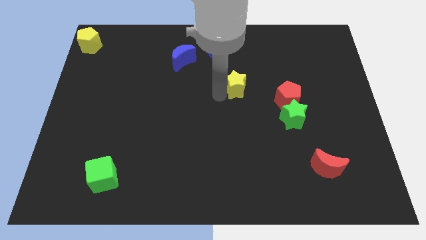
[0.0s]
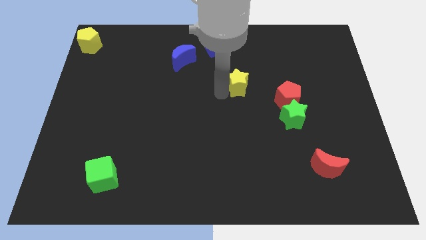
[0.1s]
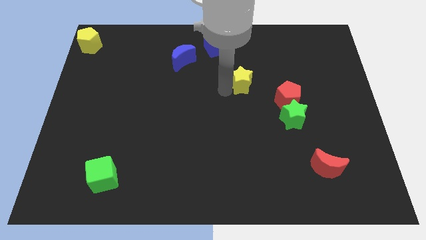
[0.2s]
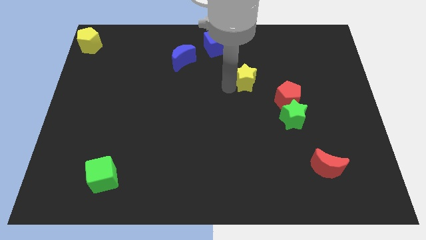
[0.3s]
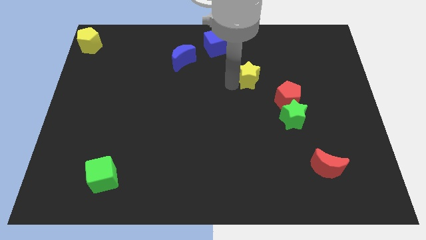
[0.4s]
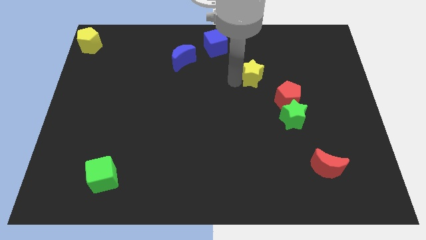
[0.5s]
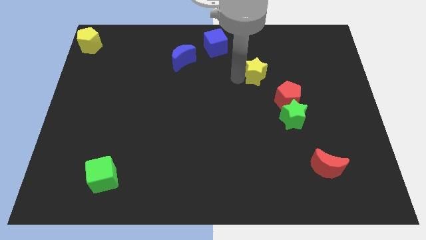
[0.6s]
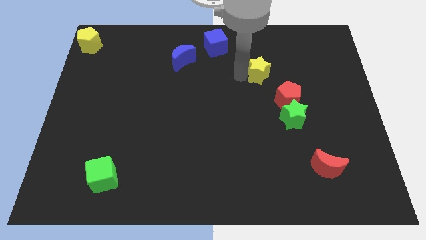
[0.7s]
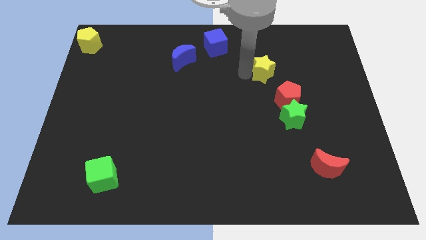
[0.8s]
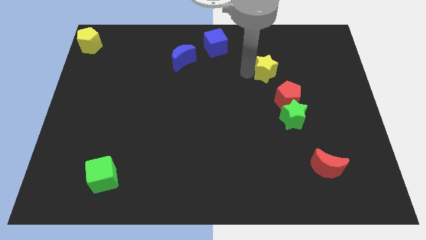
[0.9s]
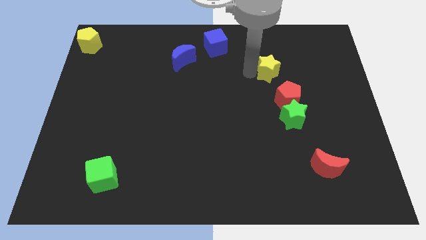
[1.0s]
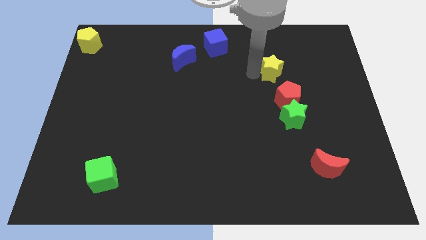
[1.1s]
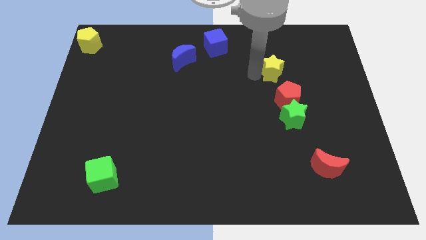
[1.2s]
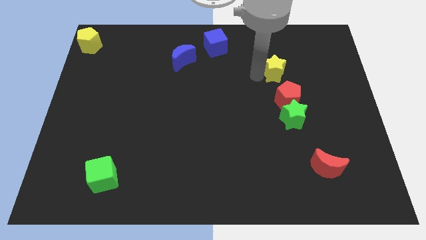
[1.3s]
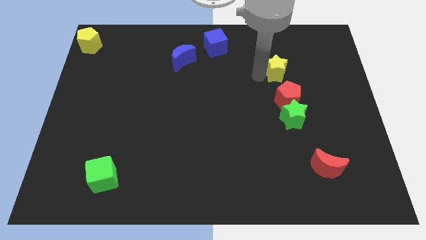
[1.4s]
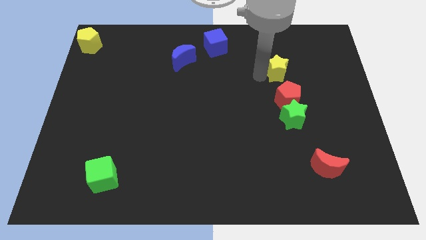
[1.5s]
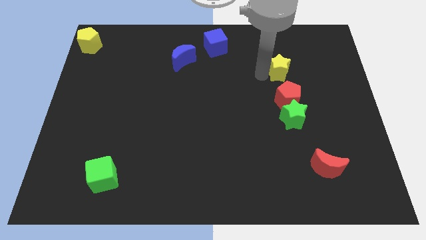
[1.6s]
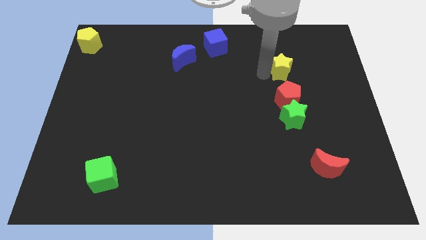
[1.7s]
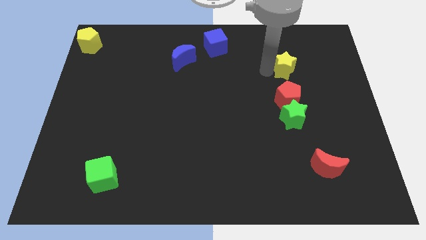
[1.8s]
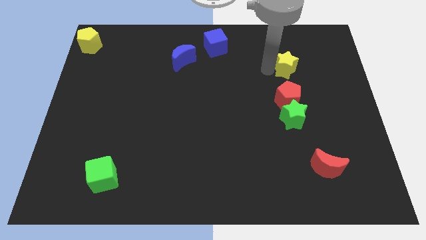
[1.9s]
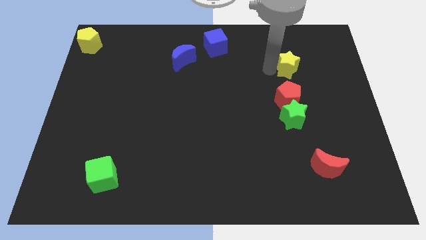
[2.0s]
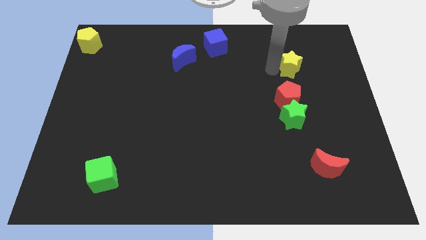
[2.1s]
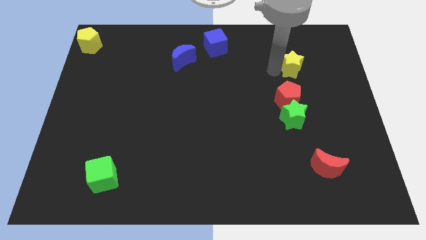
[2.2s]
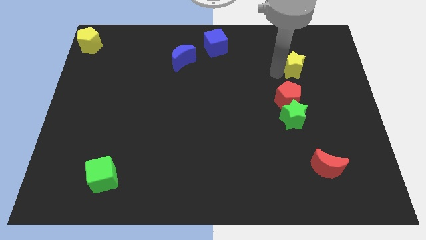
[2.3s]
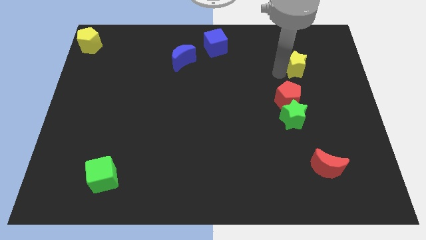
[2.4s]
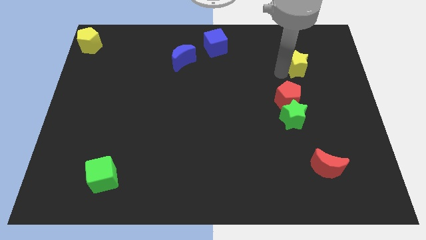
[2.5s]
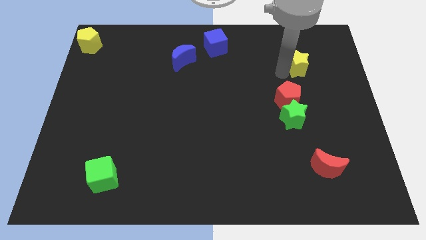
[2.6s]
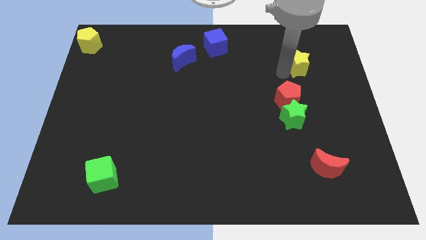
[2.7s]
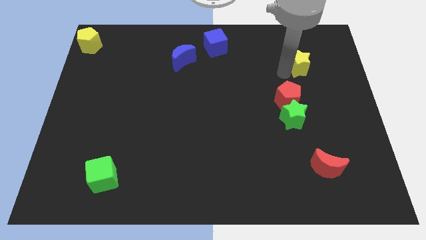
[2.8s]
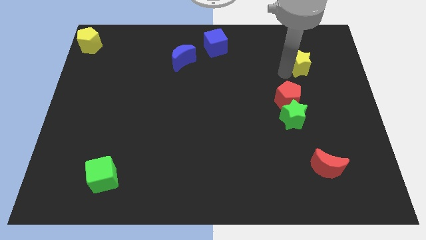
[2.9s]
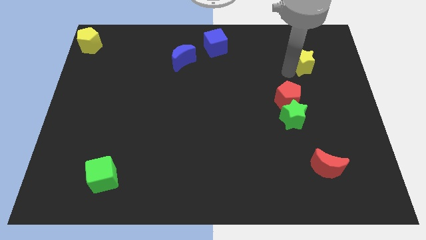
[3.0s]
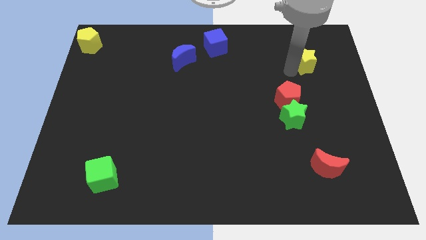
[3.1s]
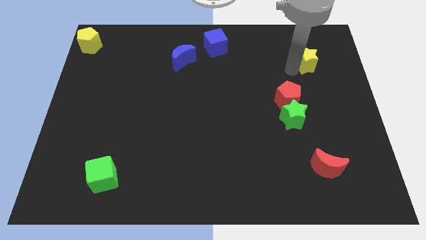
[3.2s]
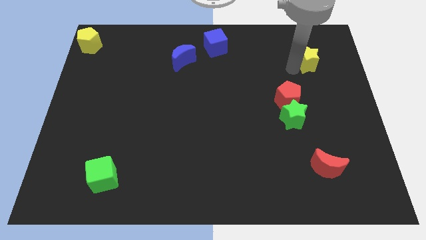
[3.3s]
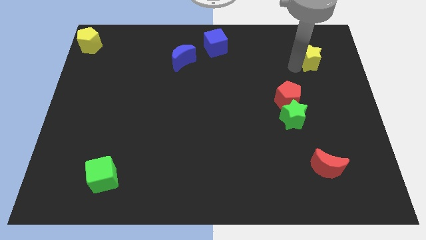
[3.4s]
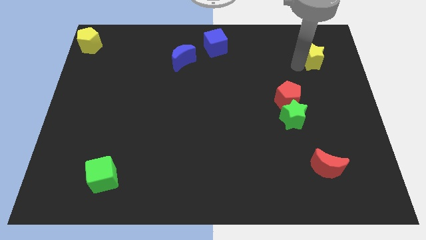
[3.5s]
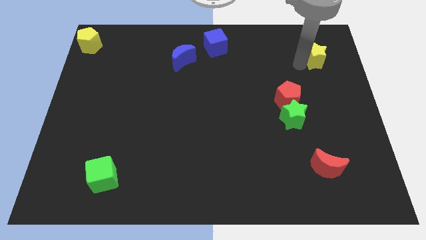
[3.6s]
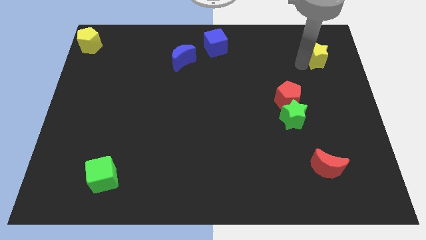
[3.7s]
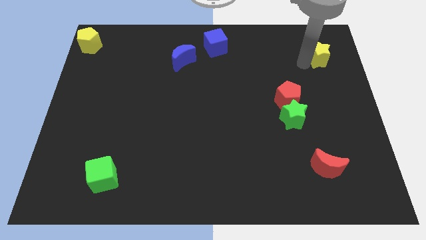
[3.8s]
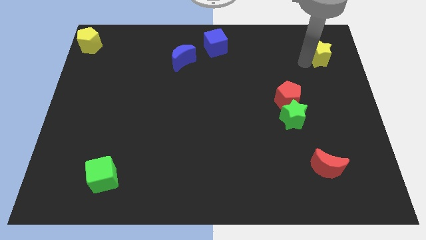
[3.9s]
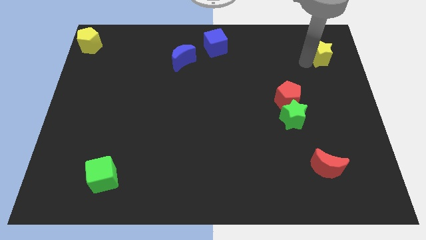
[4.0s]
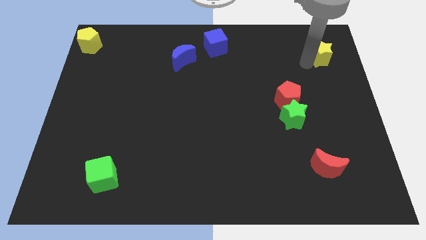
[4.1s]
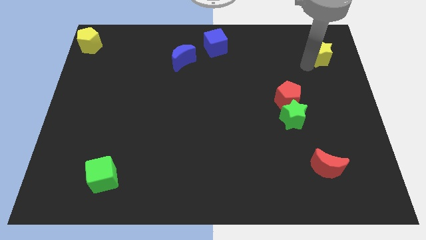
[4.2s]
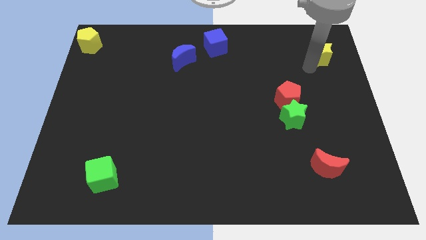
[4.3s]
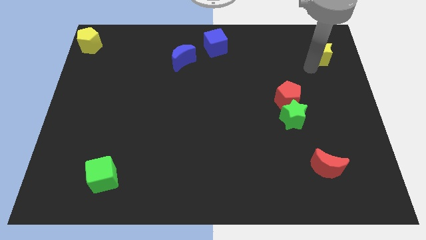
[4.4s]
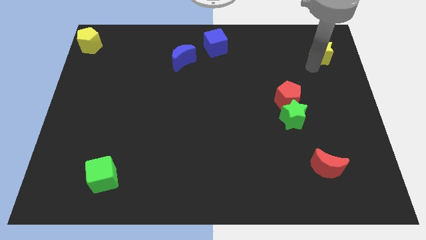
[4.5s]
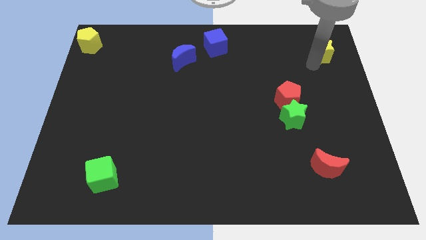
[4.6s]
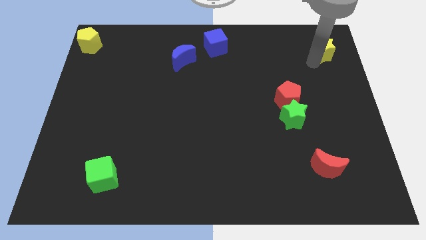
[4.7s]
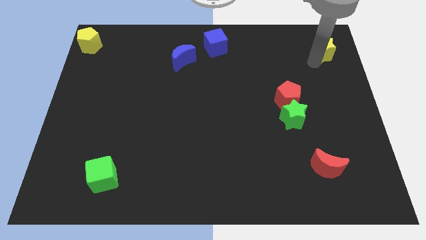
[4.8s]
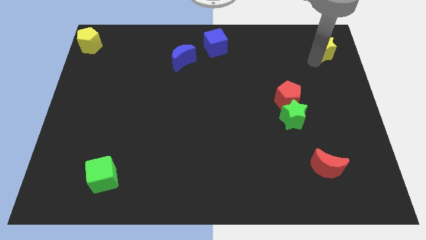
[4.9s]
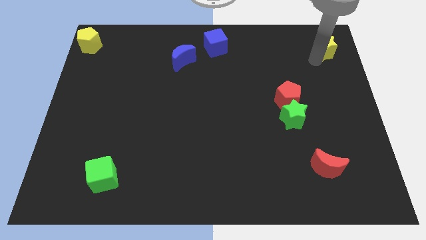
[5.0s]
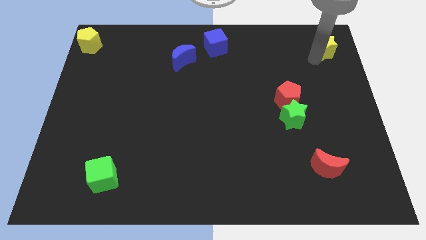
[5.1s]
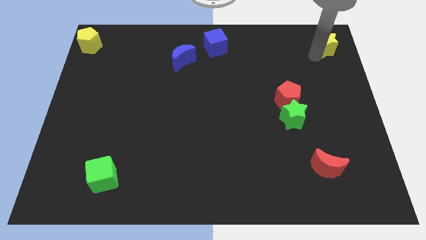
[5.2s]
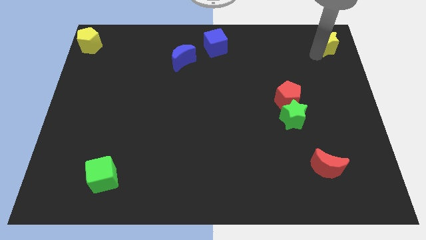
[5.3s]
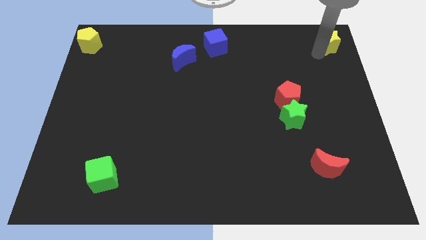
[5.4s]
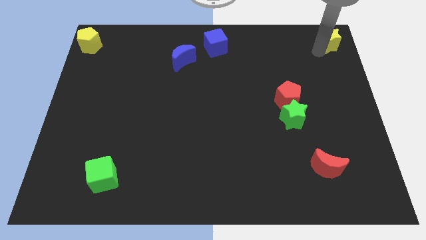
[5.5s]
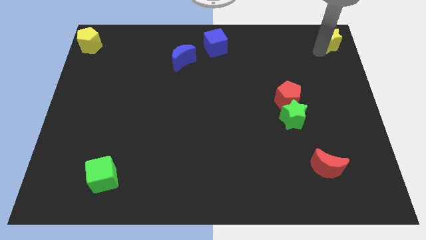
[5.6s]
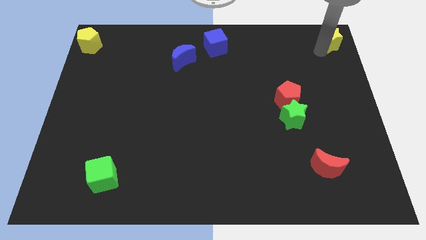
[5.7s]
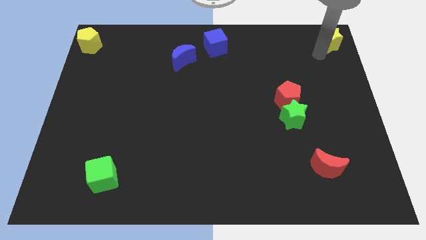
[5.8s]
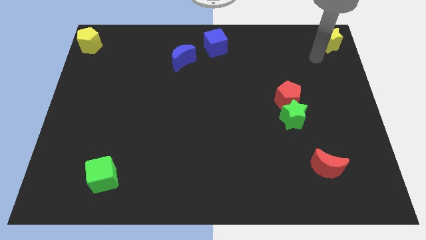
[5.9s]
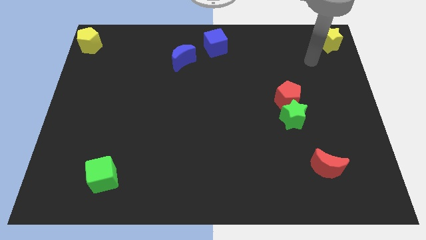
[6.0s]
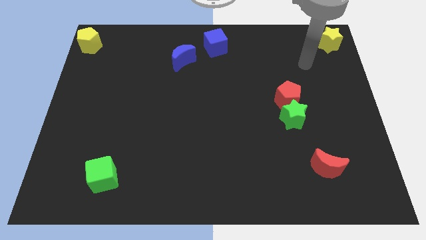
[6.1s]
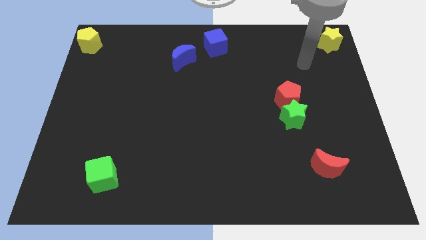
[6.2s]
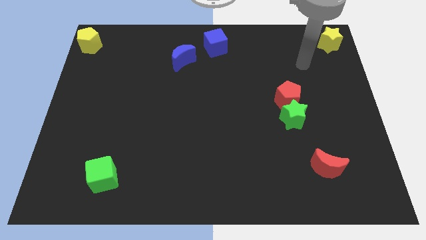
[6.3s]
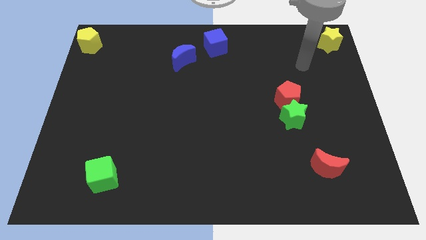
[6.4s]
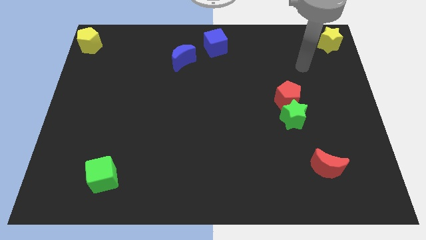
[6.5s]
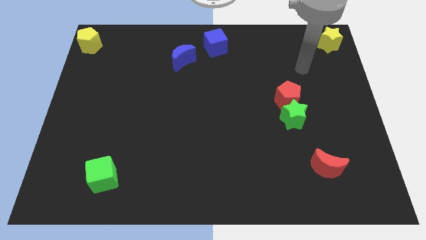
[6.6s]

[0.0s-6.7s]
push the yellow star to the top right corner of the board

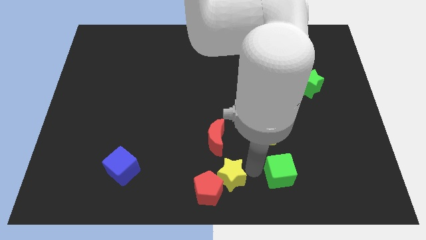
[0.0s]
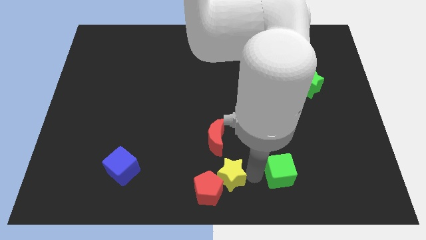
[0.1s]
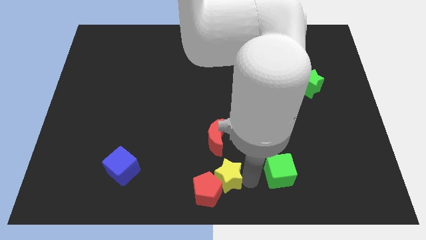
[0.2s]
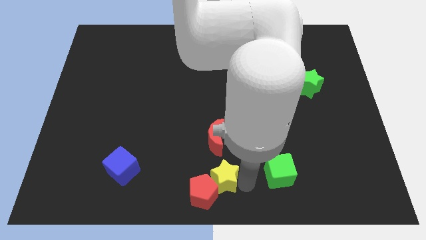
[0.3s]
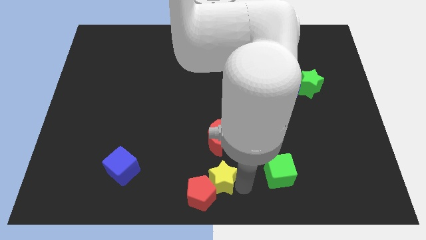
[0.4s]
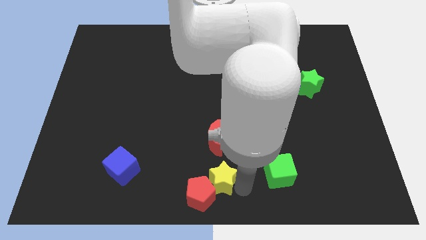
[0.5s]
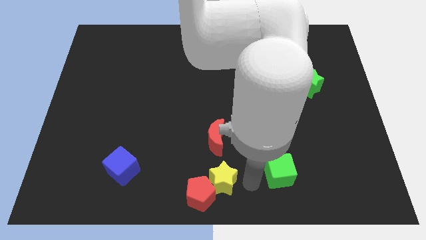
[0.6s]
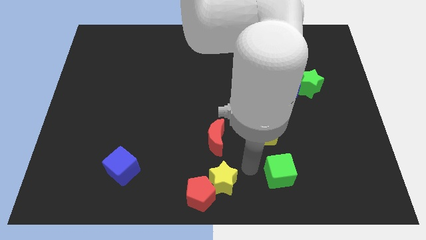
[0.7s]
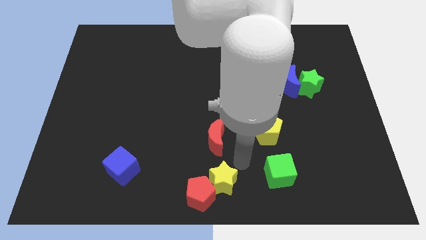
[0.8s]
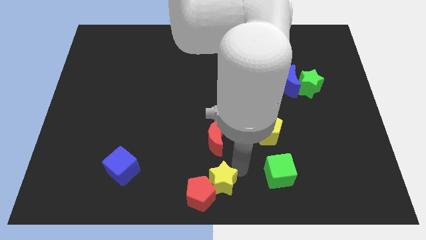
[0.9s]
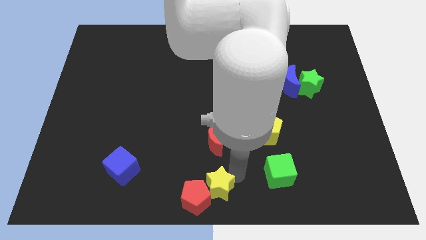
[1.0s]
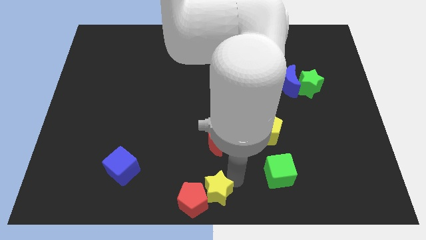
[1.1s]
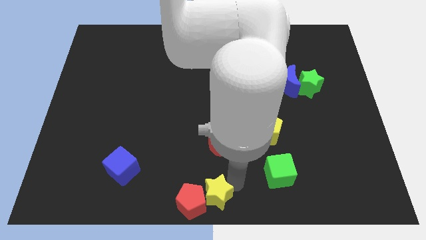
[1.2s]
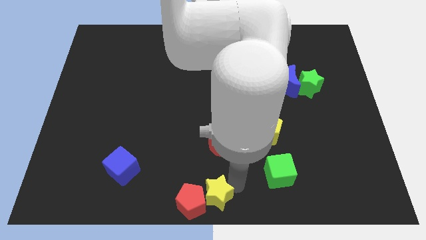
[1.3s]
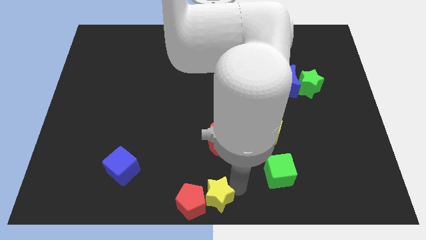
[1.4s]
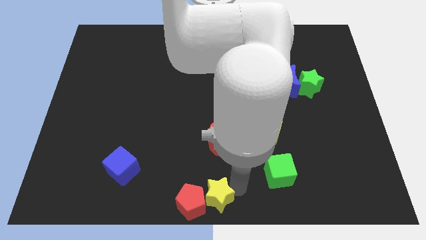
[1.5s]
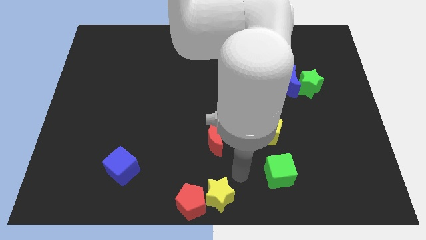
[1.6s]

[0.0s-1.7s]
move the yellow star and red pentagon to bottom center

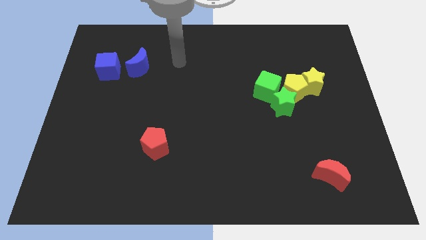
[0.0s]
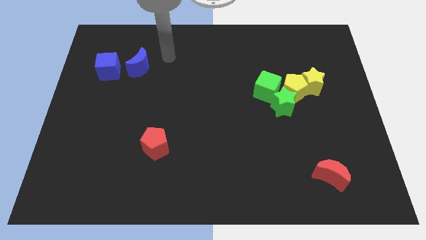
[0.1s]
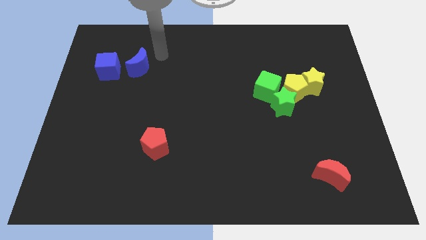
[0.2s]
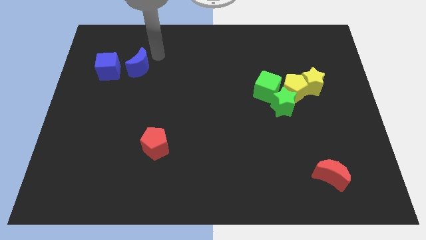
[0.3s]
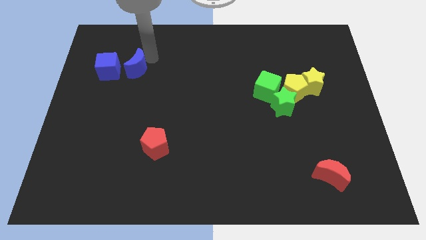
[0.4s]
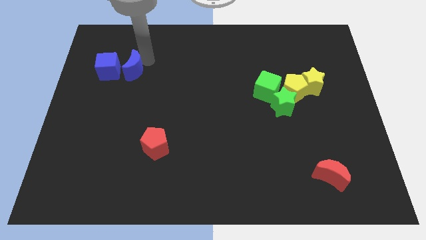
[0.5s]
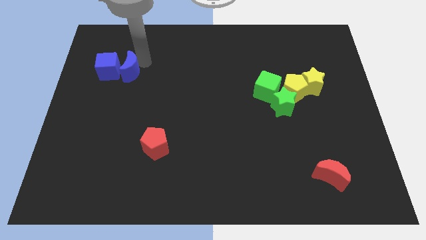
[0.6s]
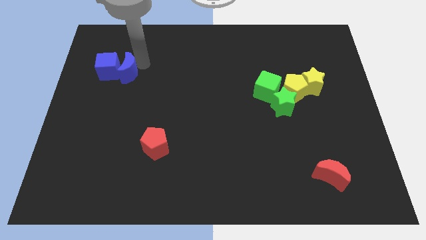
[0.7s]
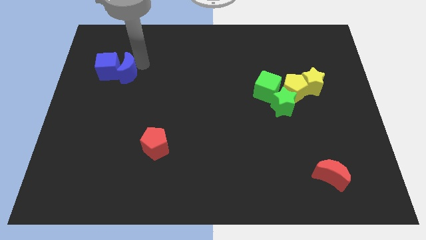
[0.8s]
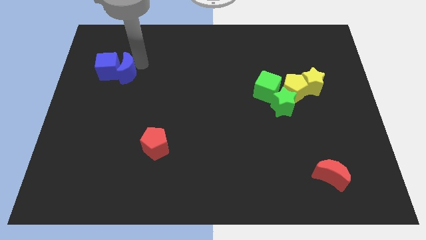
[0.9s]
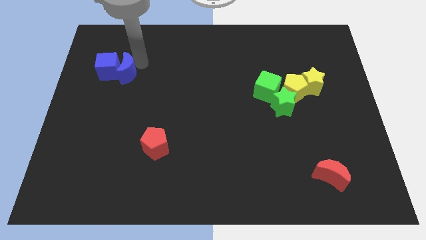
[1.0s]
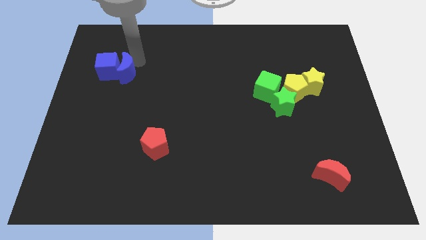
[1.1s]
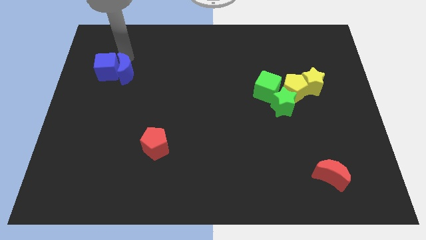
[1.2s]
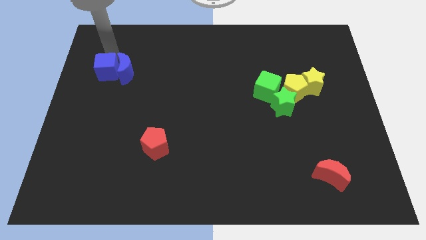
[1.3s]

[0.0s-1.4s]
push the blue crescent into the blue cube from the right
